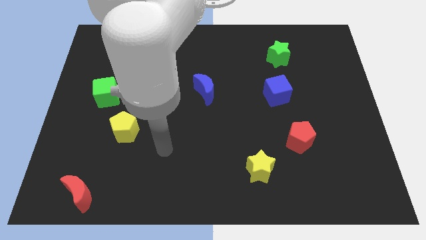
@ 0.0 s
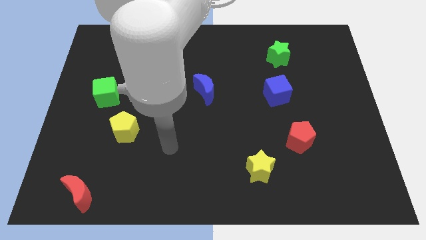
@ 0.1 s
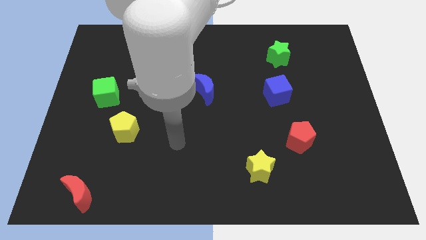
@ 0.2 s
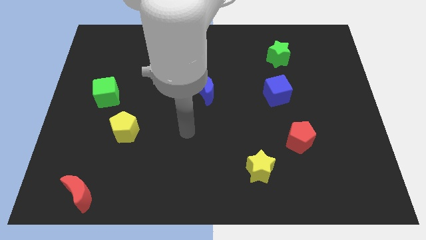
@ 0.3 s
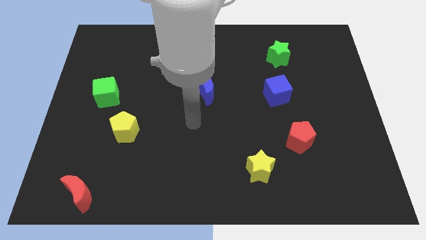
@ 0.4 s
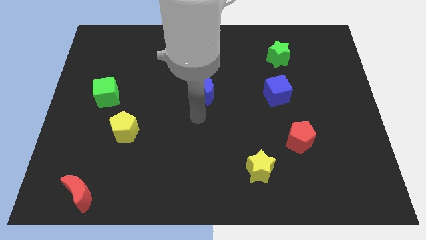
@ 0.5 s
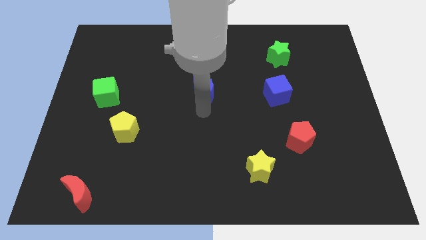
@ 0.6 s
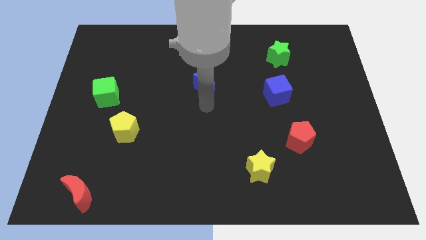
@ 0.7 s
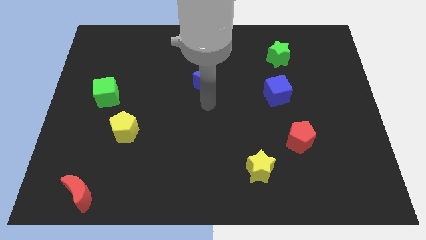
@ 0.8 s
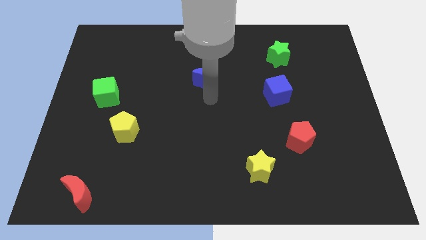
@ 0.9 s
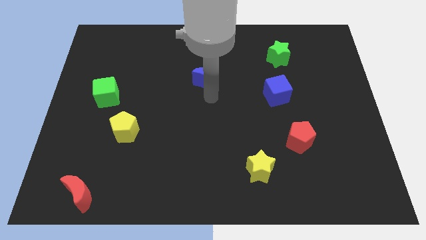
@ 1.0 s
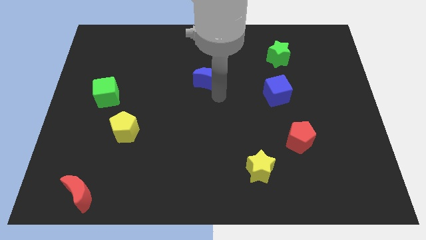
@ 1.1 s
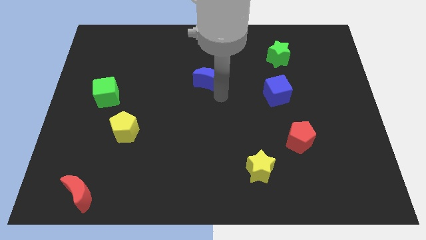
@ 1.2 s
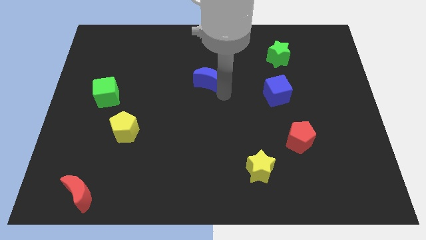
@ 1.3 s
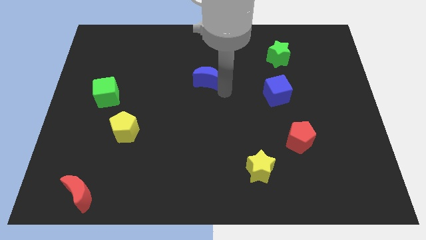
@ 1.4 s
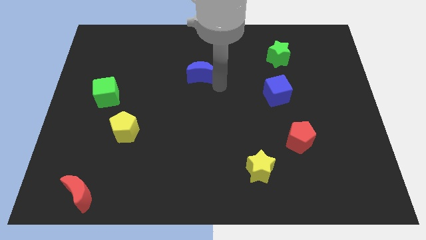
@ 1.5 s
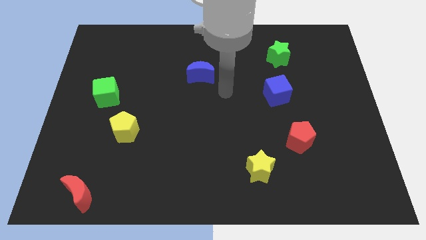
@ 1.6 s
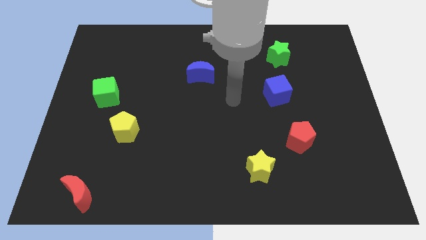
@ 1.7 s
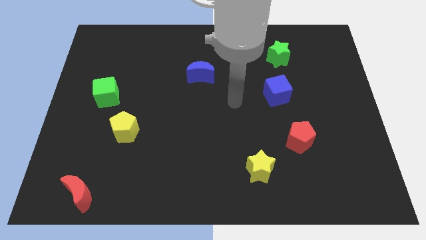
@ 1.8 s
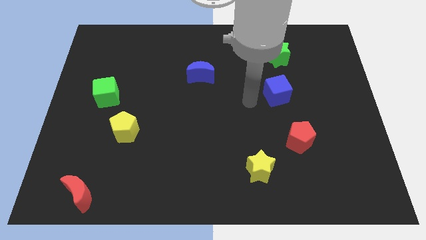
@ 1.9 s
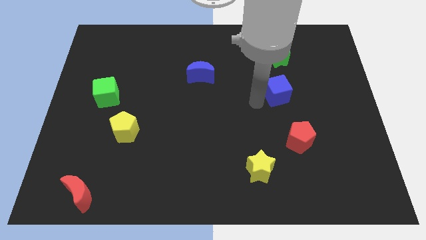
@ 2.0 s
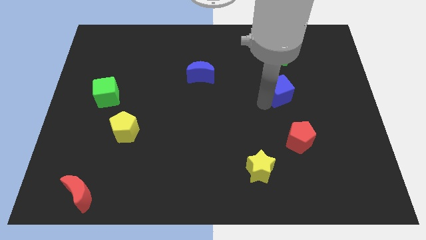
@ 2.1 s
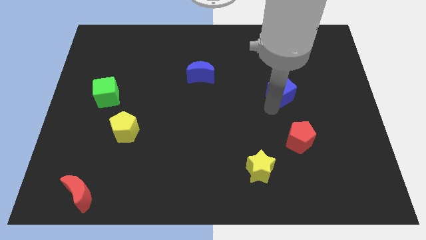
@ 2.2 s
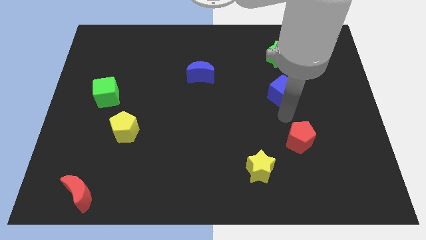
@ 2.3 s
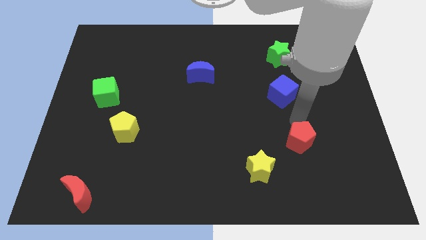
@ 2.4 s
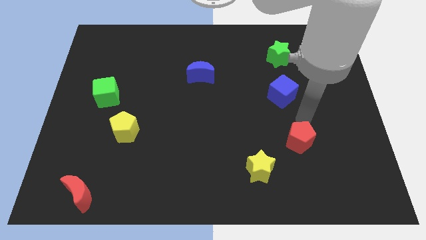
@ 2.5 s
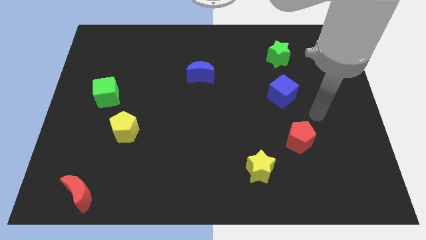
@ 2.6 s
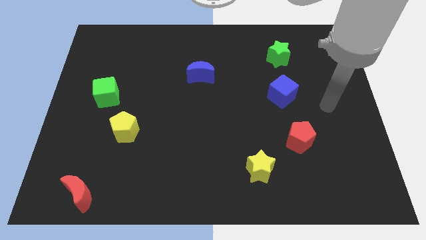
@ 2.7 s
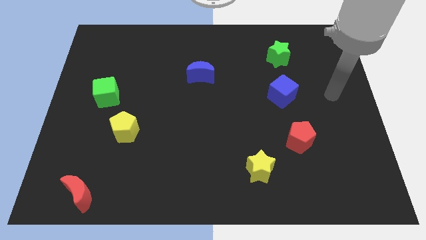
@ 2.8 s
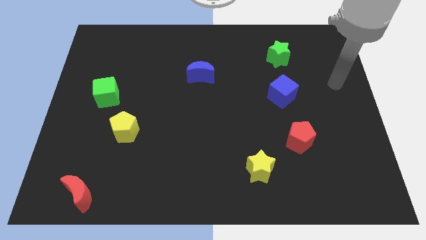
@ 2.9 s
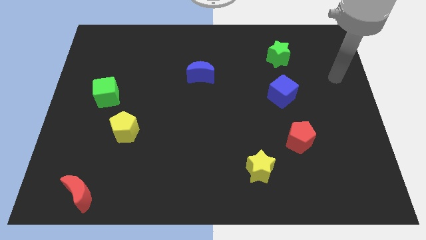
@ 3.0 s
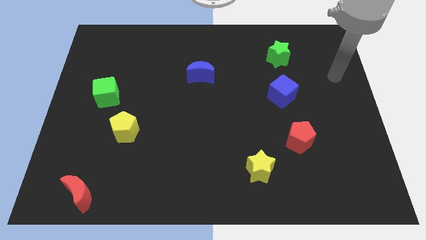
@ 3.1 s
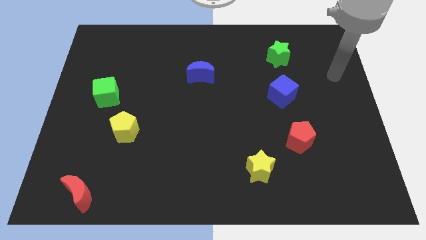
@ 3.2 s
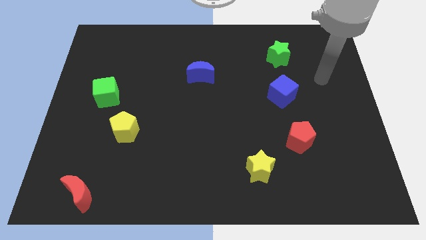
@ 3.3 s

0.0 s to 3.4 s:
go to the right side of the blue cube

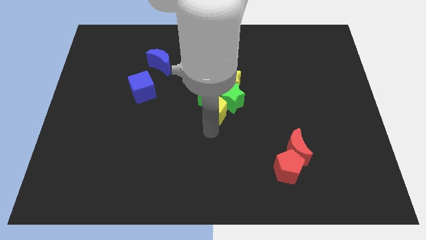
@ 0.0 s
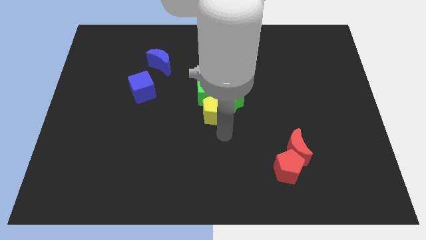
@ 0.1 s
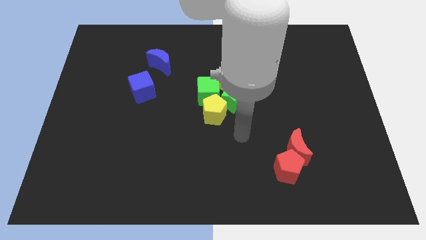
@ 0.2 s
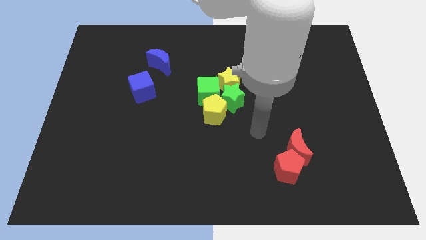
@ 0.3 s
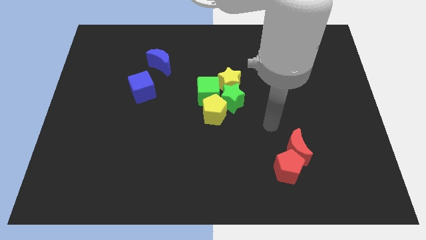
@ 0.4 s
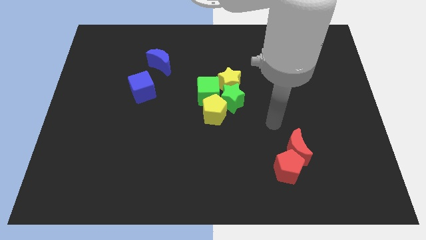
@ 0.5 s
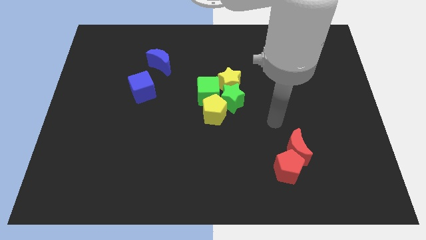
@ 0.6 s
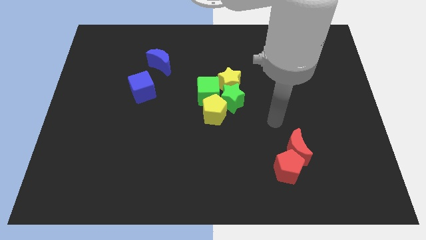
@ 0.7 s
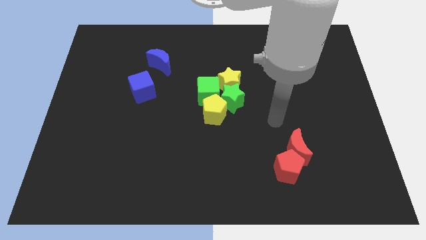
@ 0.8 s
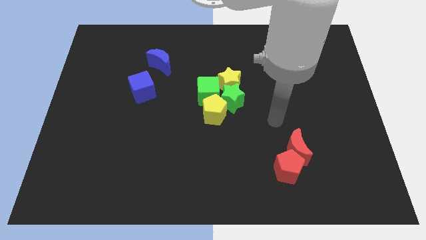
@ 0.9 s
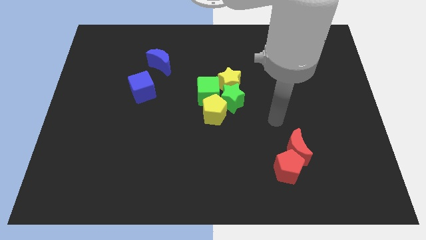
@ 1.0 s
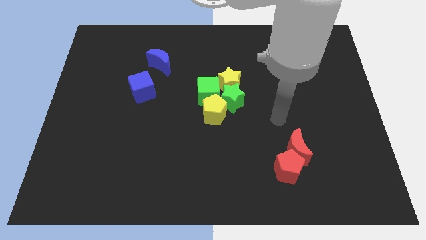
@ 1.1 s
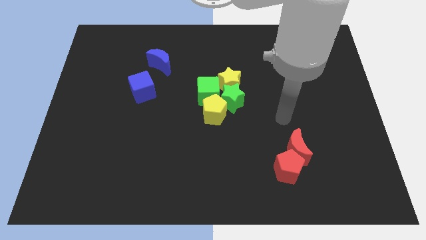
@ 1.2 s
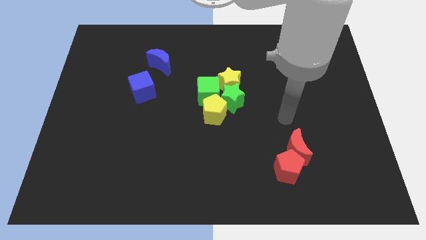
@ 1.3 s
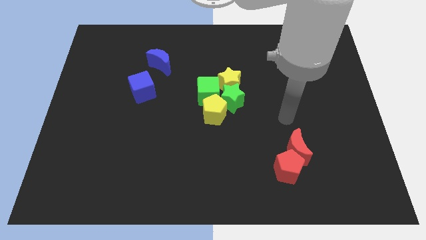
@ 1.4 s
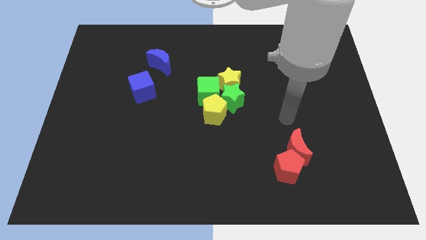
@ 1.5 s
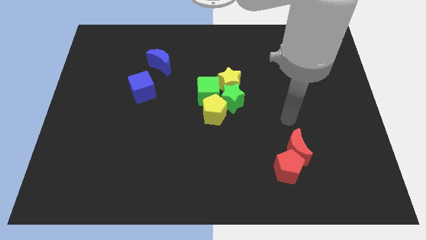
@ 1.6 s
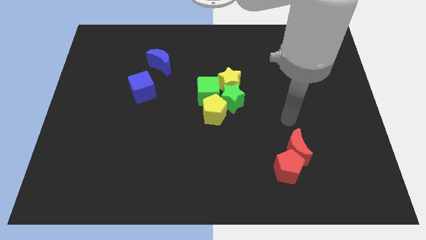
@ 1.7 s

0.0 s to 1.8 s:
point your arm at the top of the red crescent

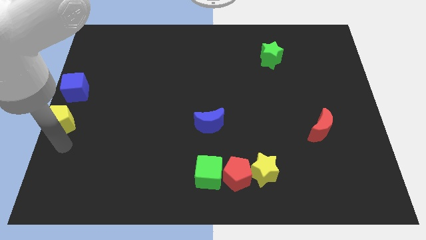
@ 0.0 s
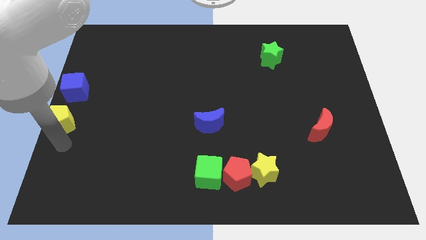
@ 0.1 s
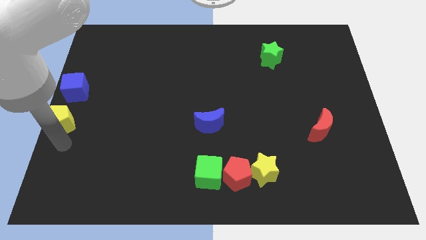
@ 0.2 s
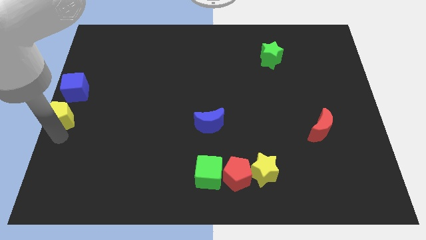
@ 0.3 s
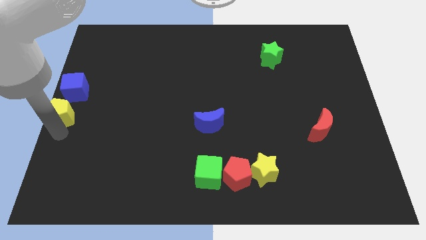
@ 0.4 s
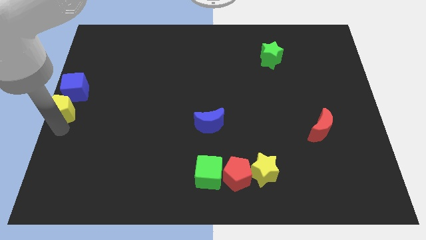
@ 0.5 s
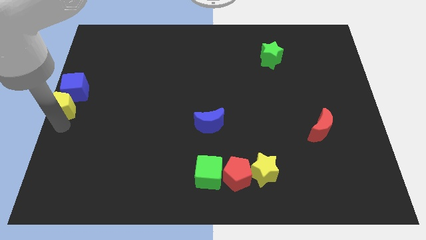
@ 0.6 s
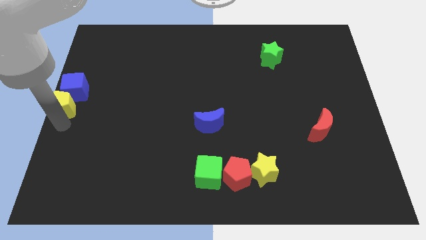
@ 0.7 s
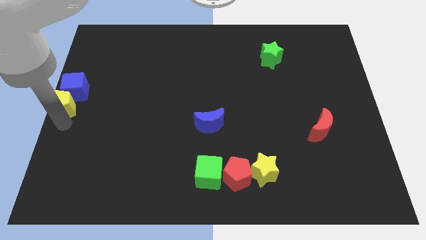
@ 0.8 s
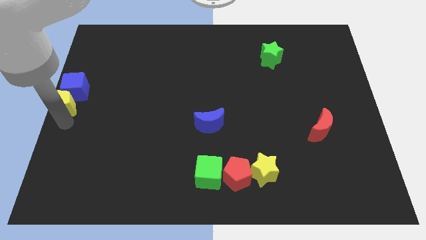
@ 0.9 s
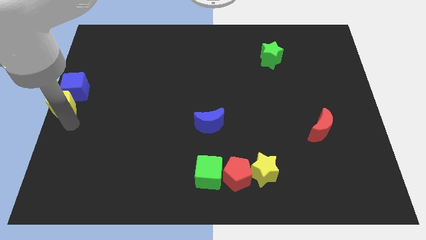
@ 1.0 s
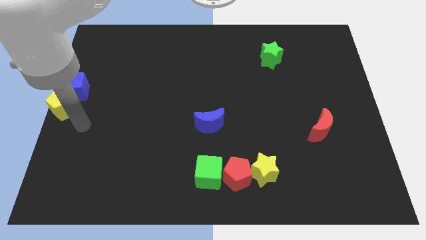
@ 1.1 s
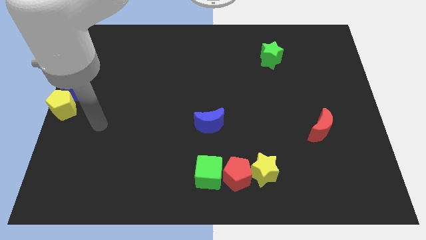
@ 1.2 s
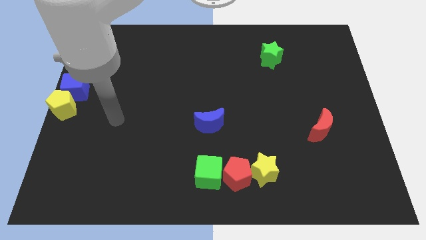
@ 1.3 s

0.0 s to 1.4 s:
push the yellow pentagon into the blue cube

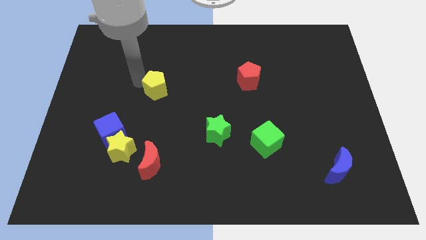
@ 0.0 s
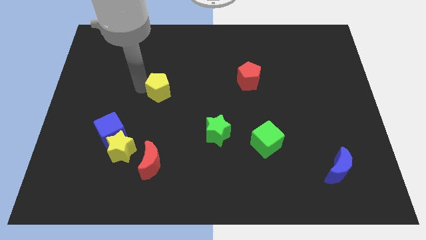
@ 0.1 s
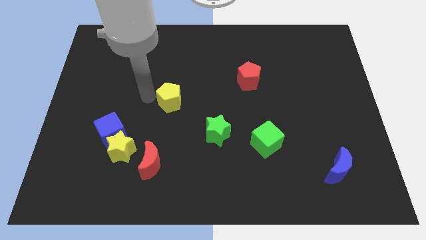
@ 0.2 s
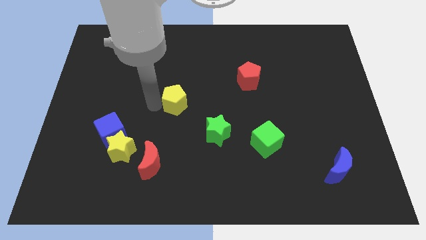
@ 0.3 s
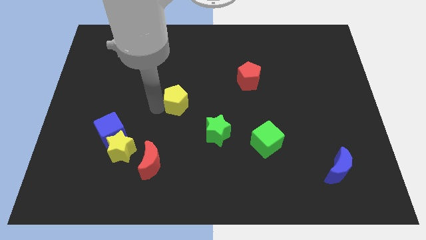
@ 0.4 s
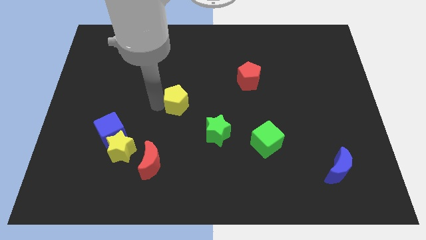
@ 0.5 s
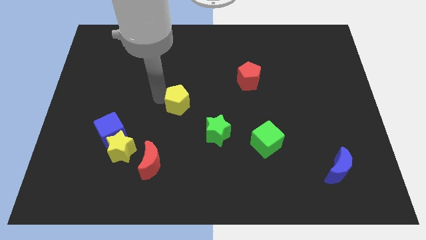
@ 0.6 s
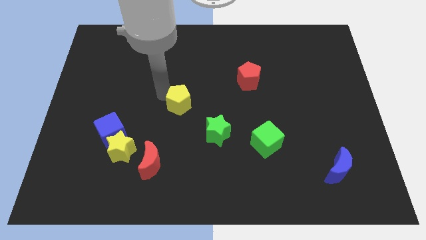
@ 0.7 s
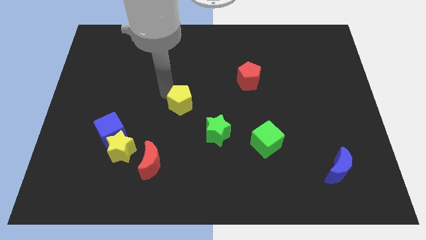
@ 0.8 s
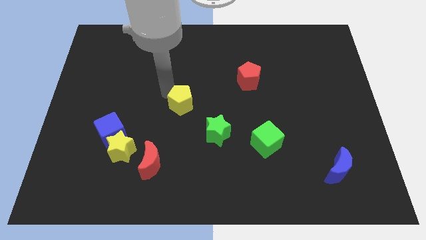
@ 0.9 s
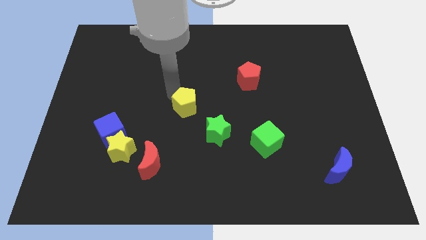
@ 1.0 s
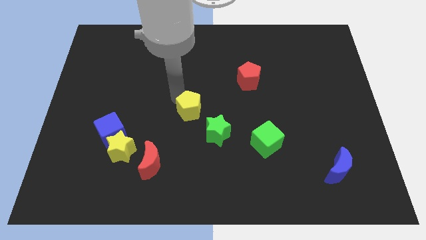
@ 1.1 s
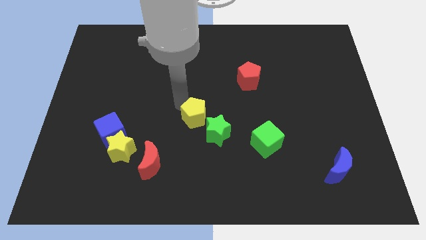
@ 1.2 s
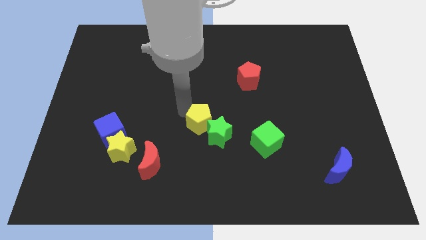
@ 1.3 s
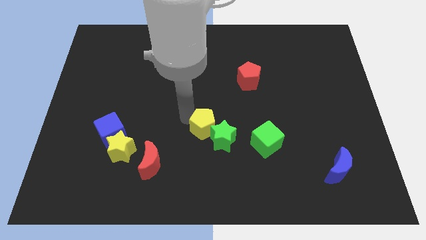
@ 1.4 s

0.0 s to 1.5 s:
push the yellow pentagon into the green star

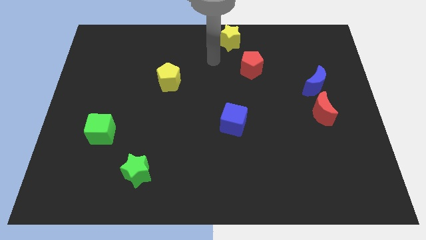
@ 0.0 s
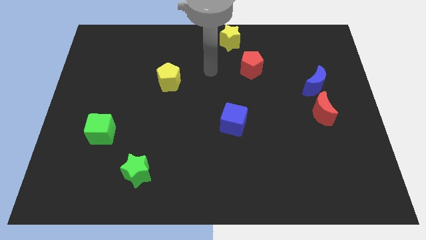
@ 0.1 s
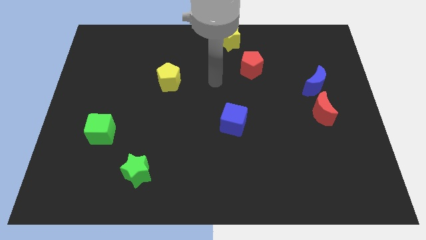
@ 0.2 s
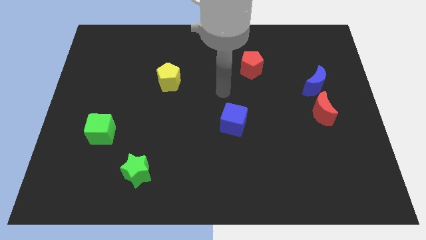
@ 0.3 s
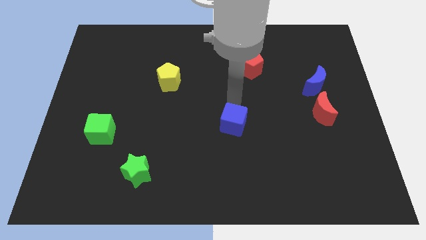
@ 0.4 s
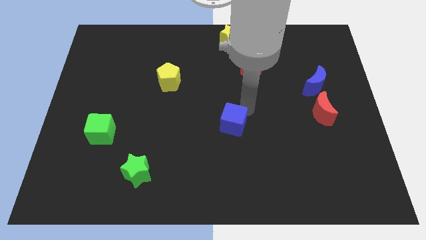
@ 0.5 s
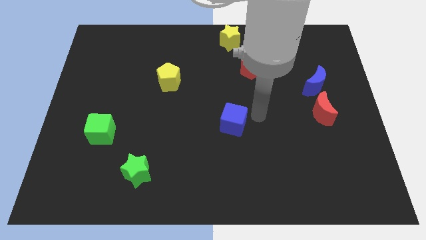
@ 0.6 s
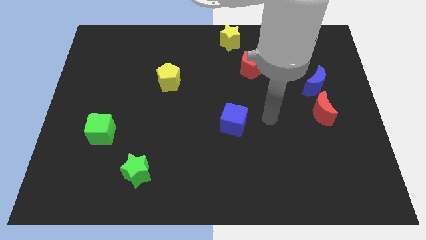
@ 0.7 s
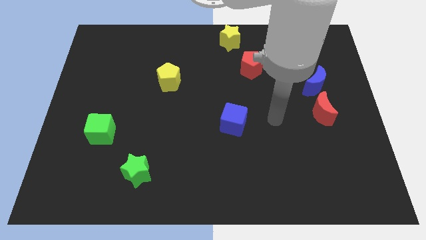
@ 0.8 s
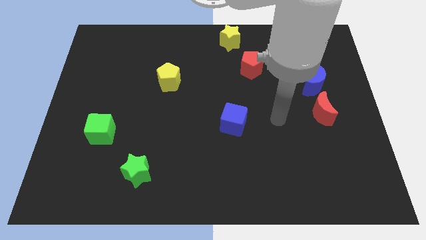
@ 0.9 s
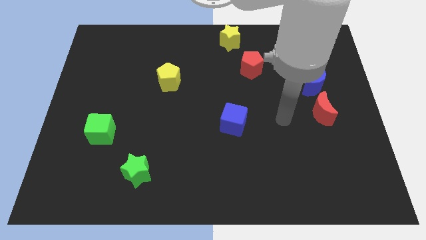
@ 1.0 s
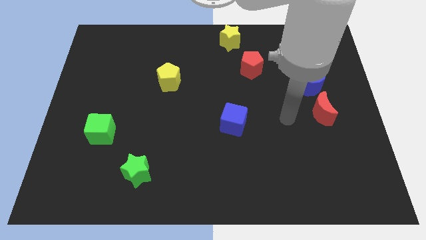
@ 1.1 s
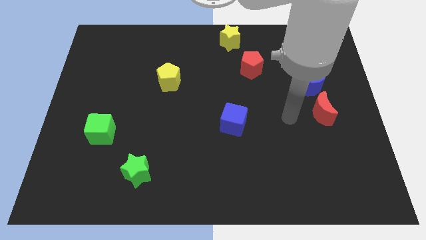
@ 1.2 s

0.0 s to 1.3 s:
point the arm to the right of the blue cube
